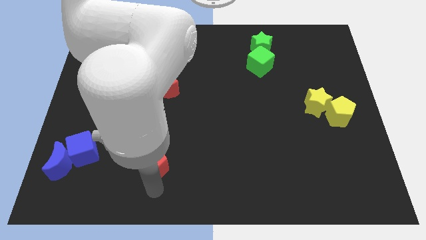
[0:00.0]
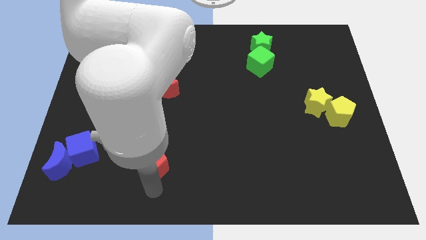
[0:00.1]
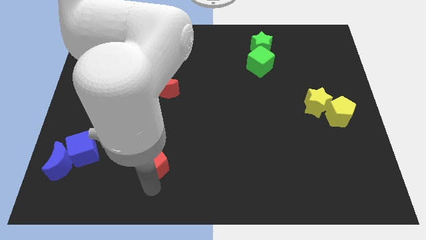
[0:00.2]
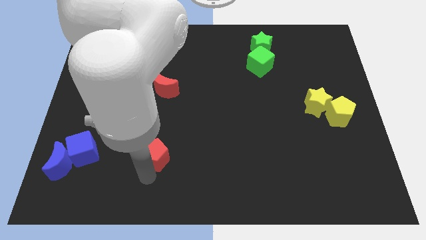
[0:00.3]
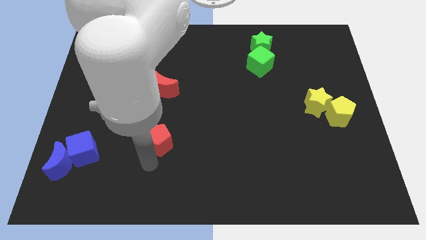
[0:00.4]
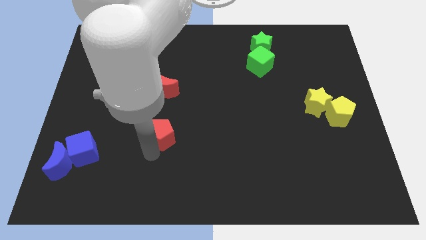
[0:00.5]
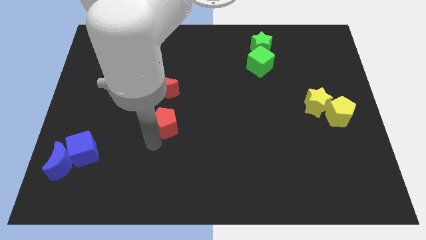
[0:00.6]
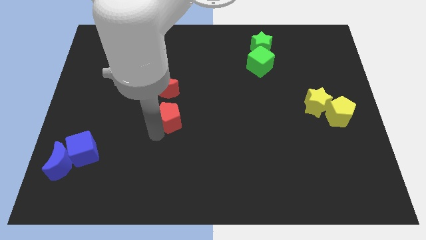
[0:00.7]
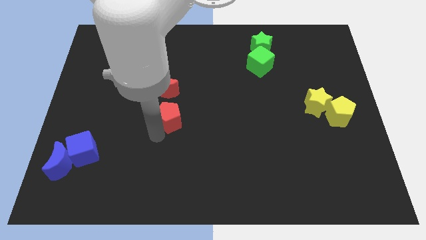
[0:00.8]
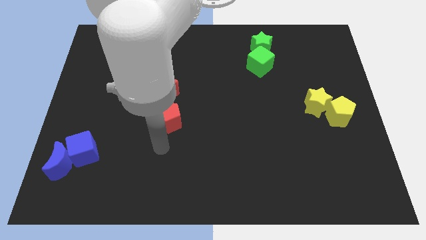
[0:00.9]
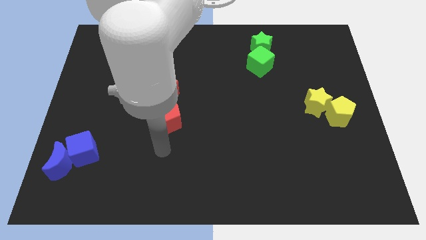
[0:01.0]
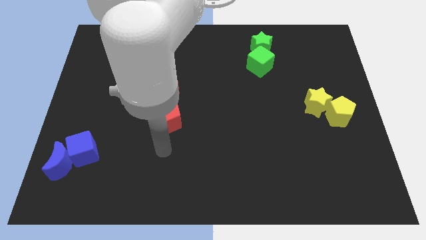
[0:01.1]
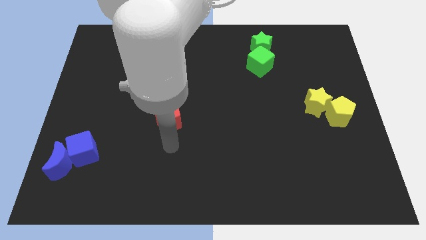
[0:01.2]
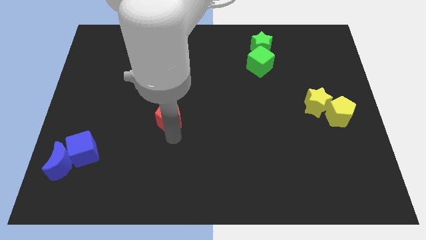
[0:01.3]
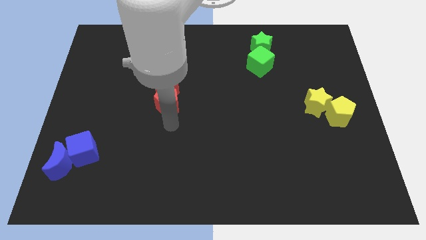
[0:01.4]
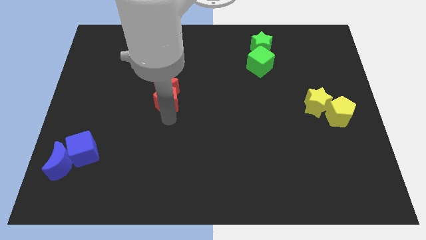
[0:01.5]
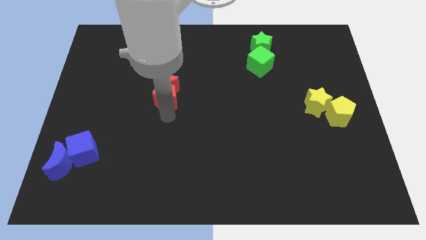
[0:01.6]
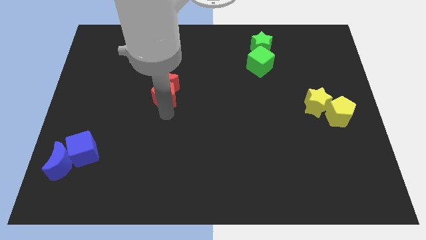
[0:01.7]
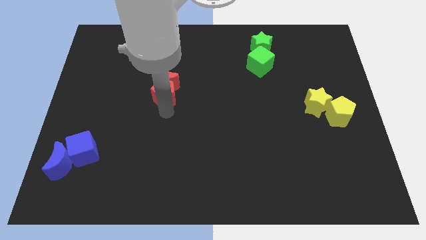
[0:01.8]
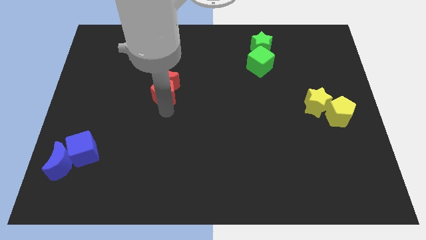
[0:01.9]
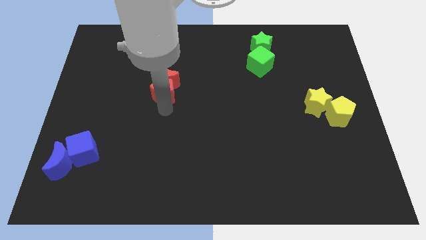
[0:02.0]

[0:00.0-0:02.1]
slide red pentagon into red moon

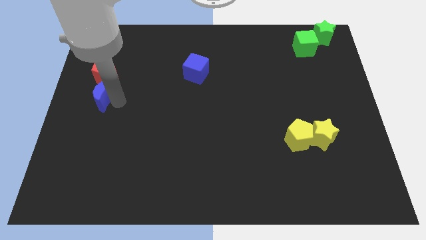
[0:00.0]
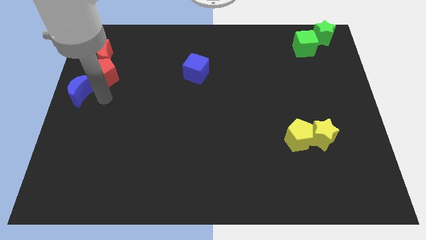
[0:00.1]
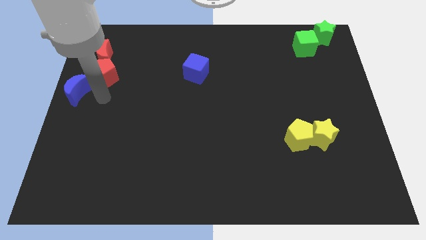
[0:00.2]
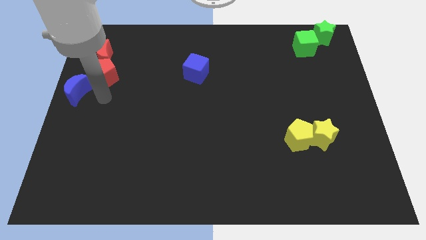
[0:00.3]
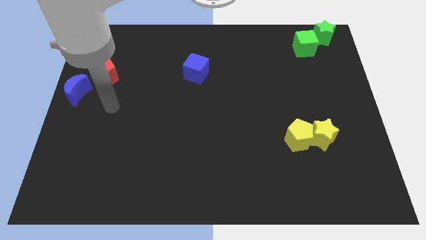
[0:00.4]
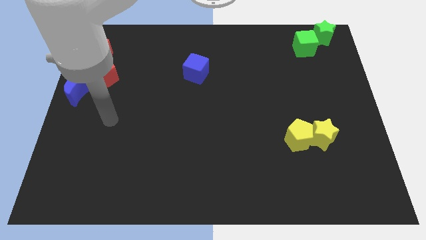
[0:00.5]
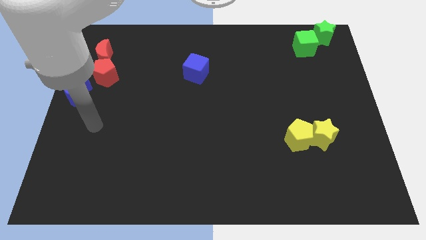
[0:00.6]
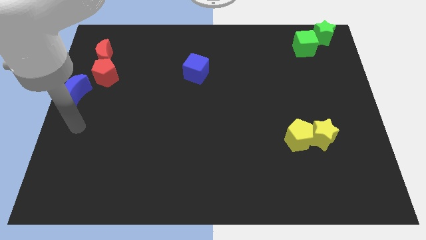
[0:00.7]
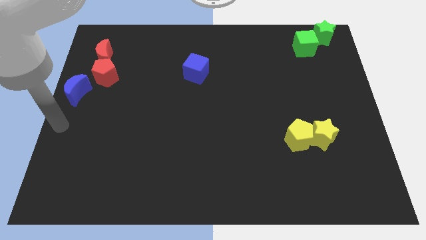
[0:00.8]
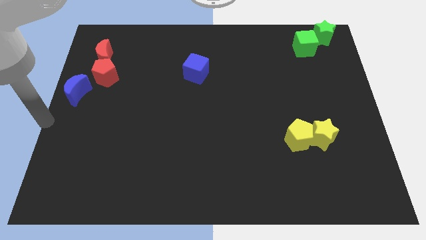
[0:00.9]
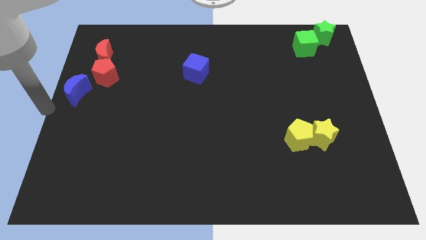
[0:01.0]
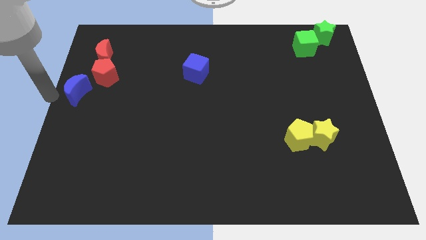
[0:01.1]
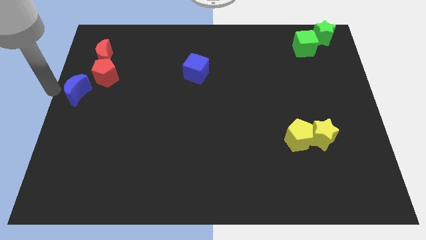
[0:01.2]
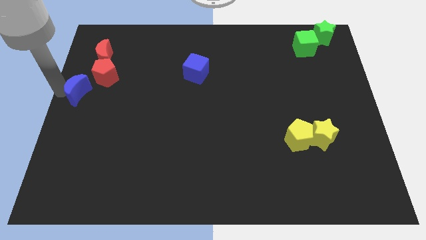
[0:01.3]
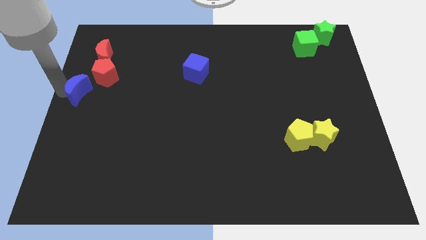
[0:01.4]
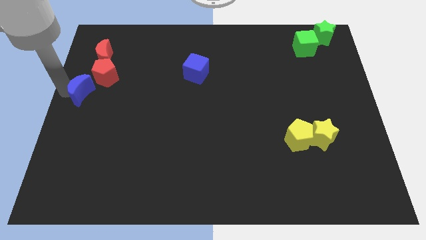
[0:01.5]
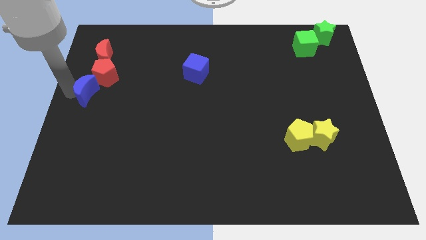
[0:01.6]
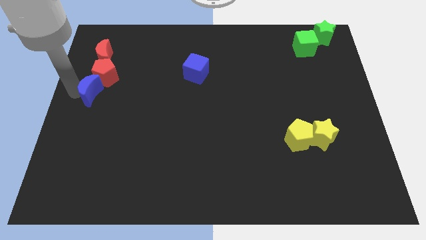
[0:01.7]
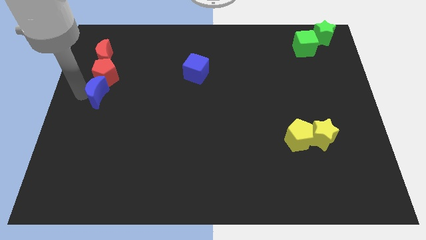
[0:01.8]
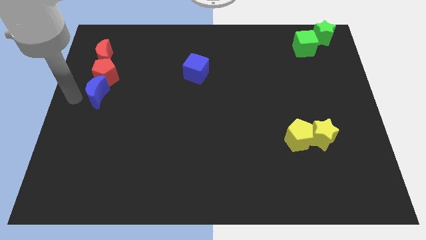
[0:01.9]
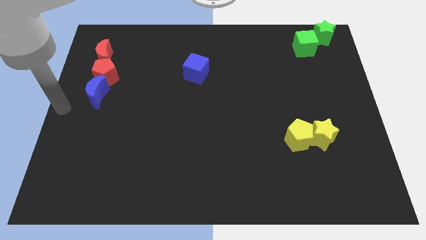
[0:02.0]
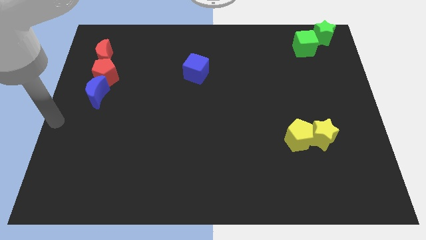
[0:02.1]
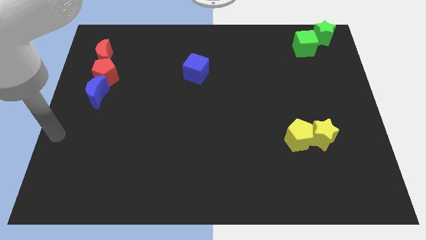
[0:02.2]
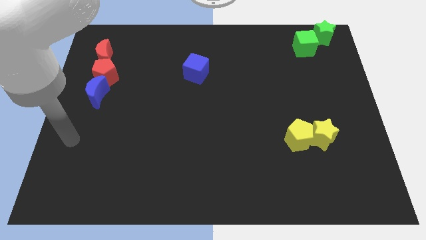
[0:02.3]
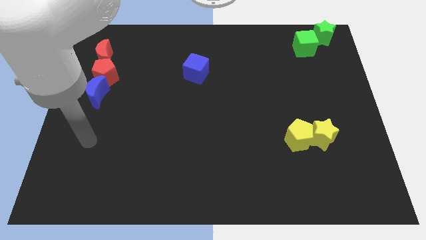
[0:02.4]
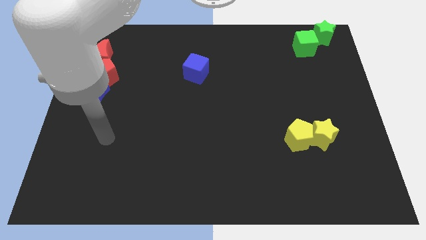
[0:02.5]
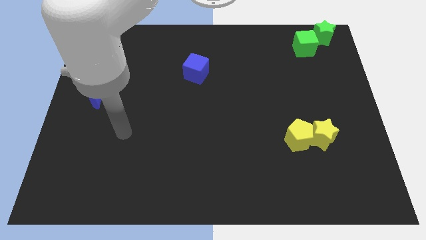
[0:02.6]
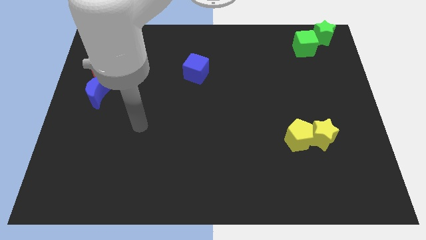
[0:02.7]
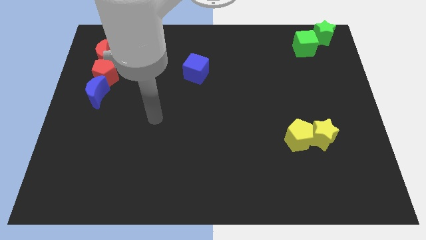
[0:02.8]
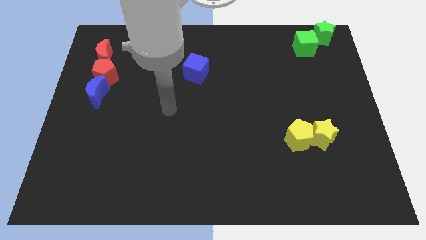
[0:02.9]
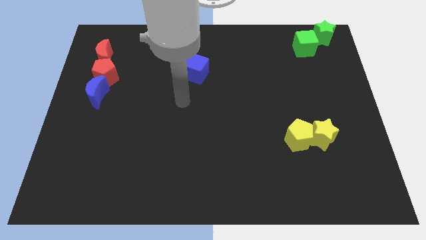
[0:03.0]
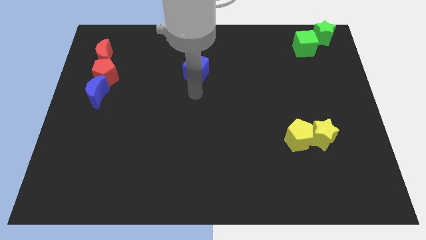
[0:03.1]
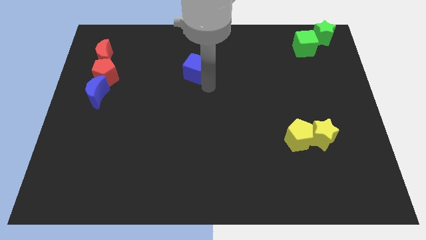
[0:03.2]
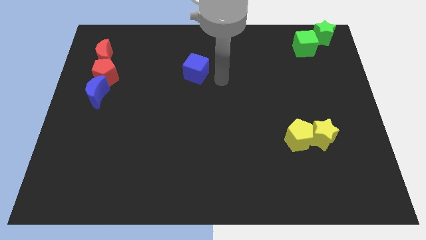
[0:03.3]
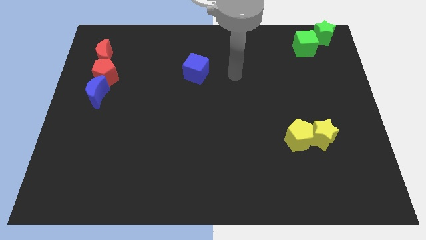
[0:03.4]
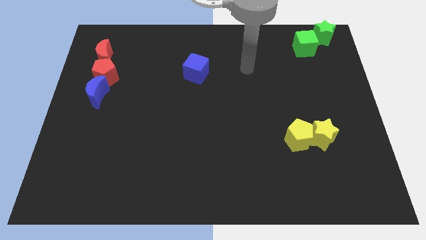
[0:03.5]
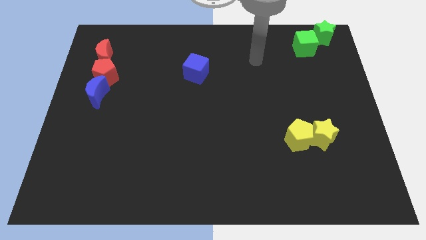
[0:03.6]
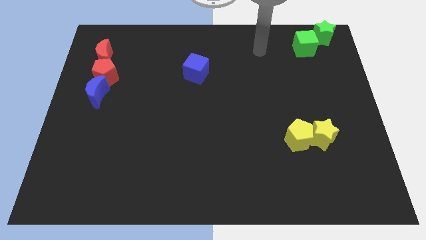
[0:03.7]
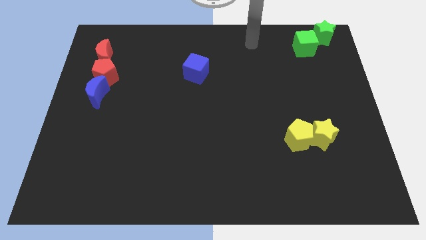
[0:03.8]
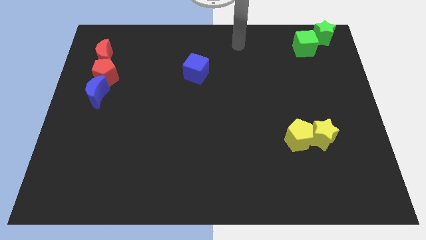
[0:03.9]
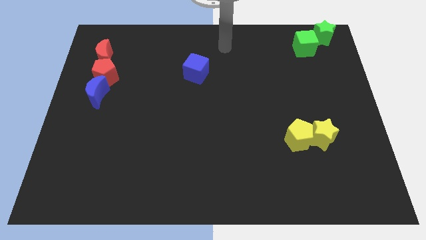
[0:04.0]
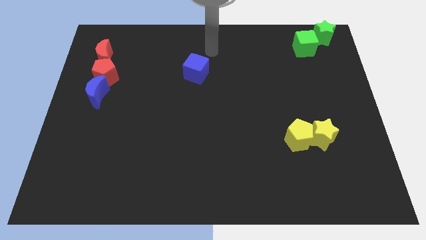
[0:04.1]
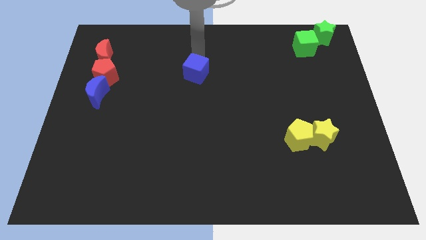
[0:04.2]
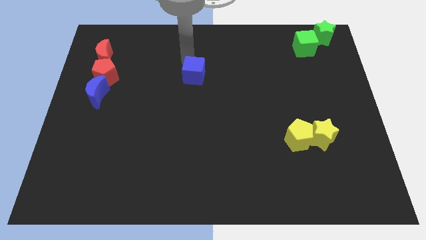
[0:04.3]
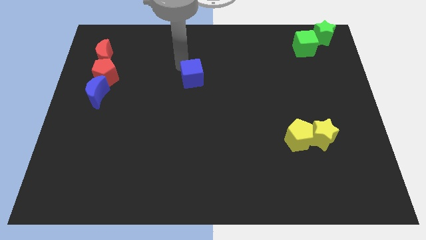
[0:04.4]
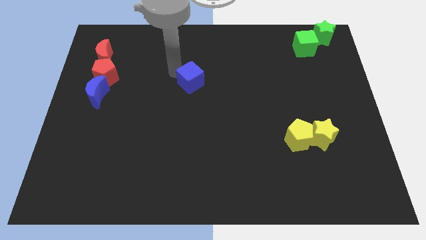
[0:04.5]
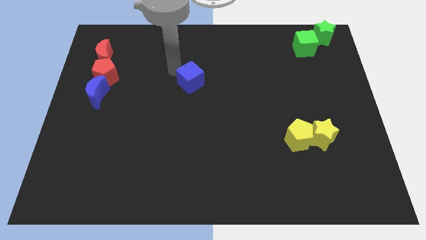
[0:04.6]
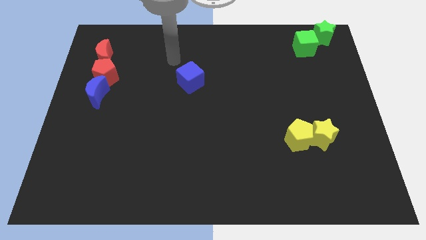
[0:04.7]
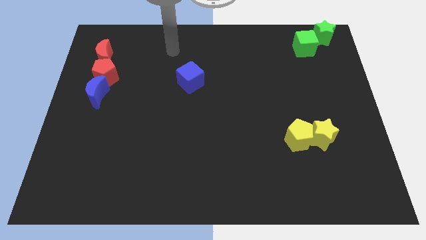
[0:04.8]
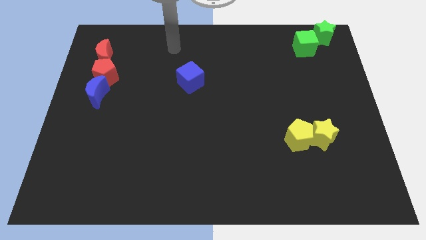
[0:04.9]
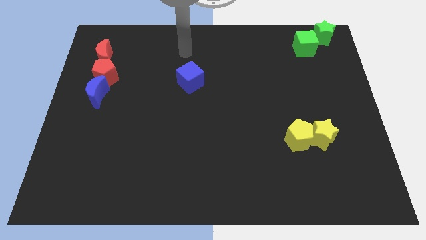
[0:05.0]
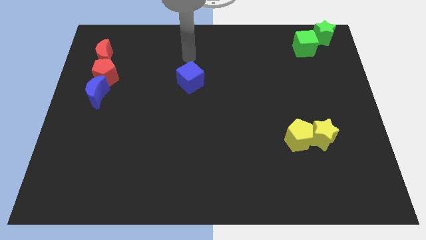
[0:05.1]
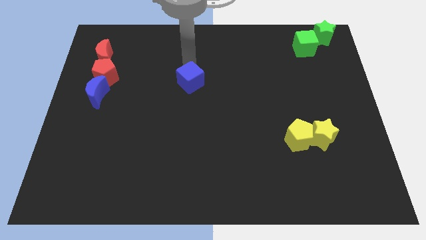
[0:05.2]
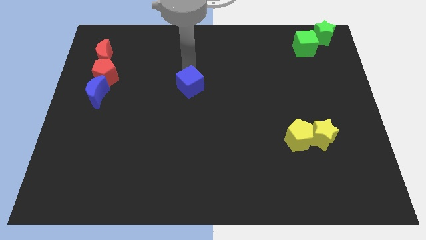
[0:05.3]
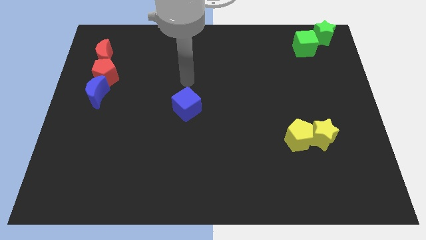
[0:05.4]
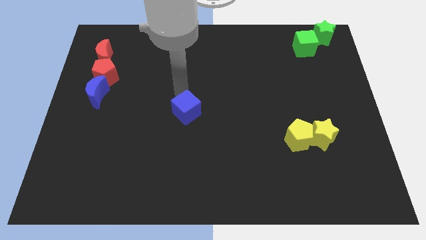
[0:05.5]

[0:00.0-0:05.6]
slide the blue block to the centre of the board

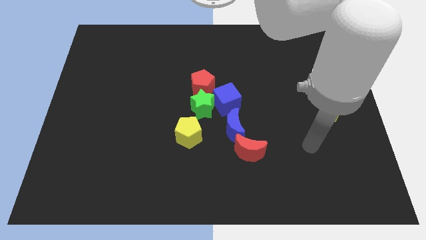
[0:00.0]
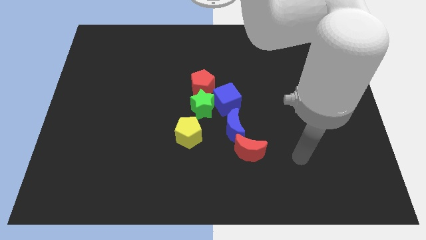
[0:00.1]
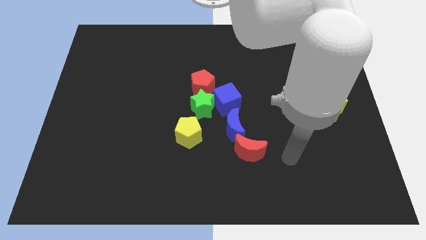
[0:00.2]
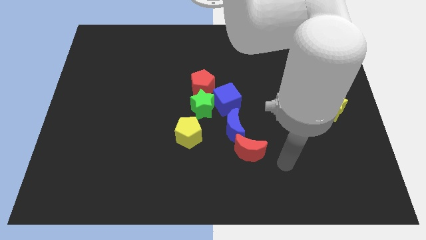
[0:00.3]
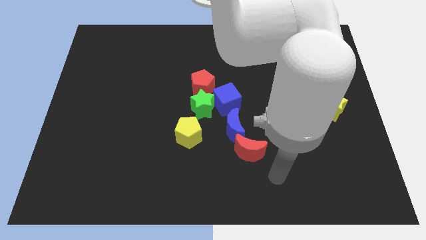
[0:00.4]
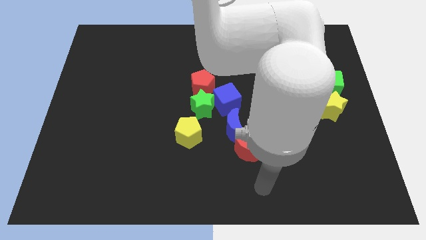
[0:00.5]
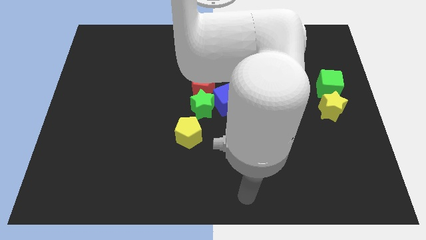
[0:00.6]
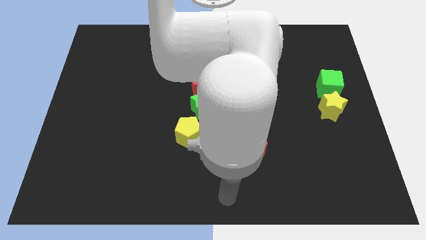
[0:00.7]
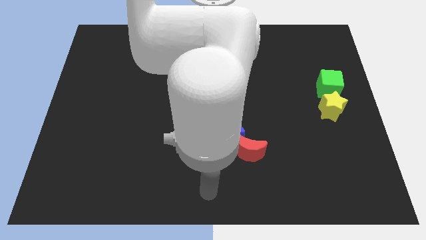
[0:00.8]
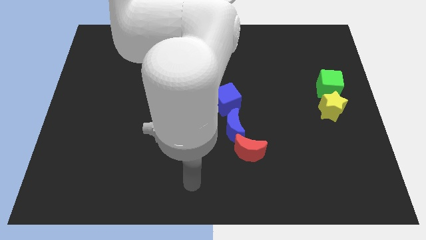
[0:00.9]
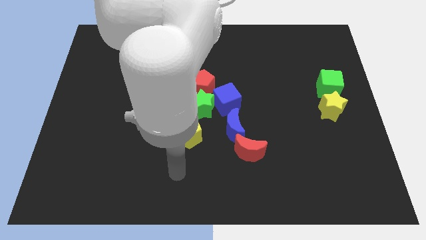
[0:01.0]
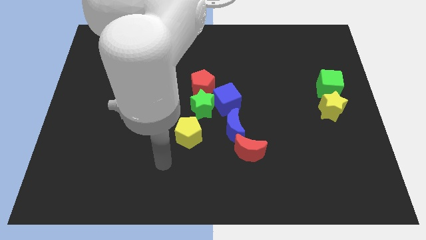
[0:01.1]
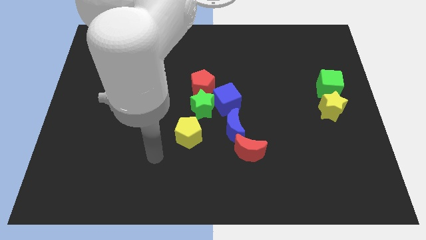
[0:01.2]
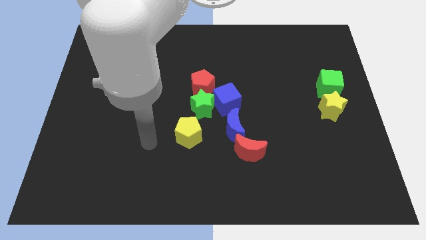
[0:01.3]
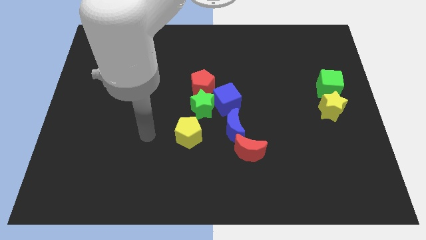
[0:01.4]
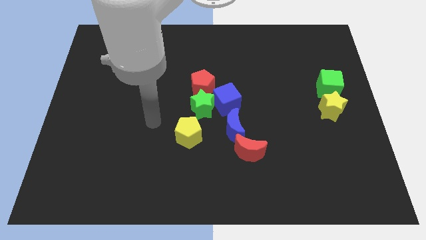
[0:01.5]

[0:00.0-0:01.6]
point your arm at the left of the yellow pentagon
